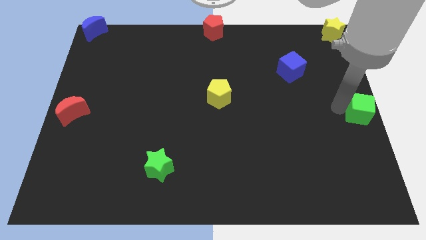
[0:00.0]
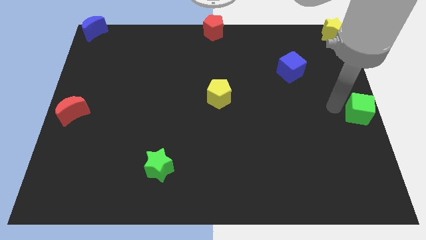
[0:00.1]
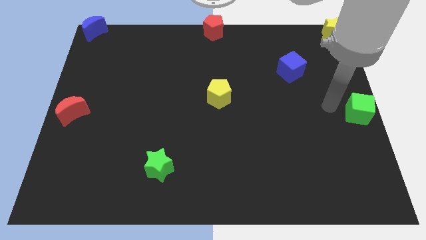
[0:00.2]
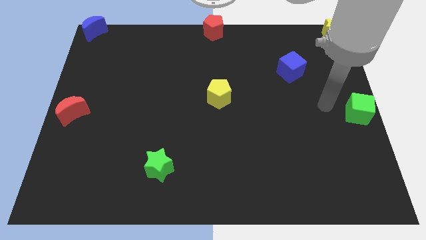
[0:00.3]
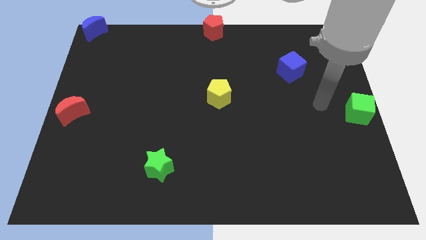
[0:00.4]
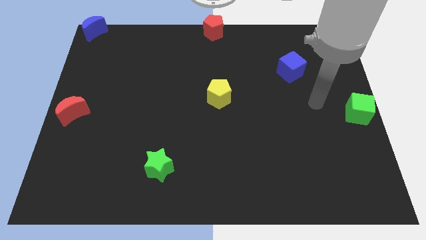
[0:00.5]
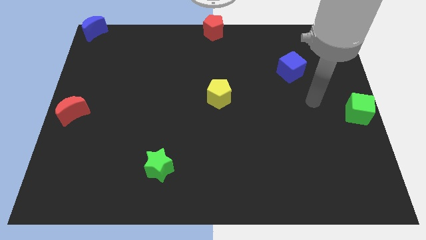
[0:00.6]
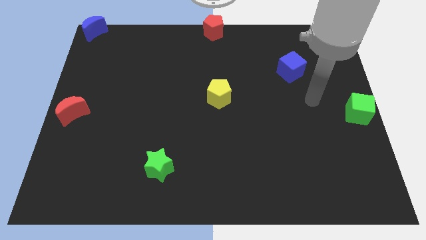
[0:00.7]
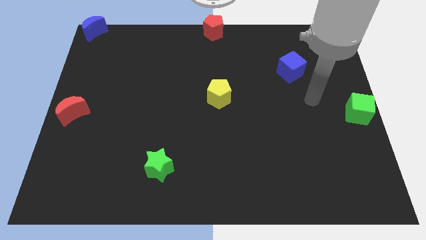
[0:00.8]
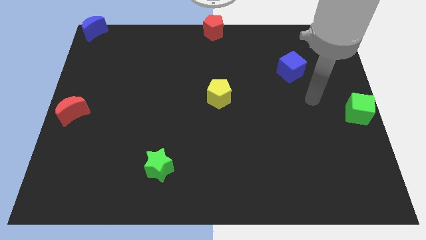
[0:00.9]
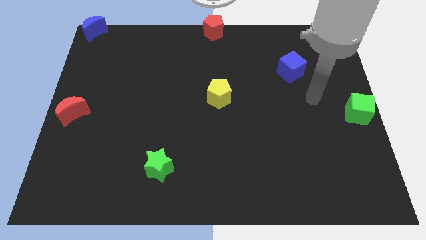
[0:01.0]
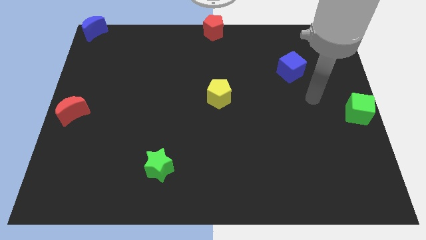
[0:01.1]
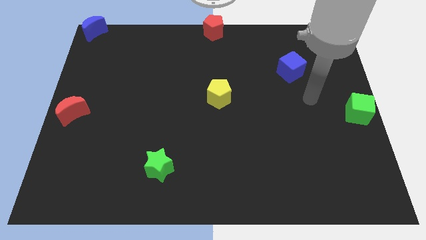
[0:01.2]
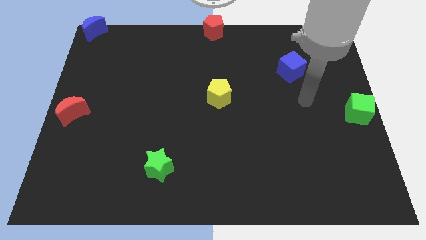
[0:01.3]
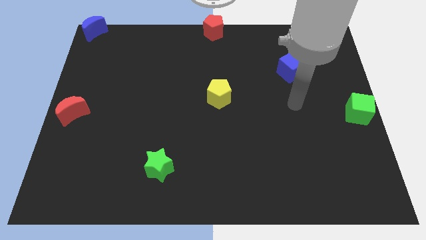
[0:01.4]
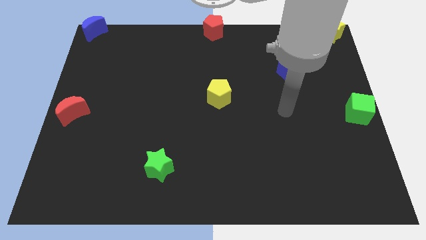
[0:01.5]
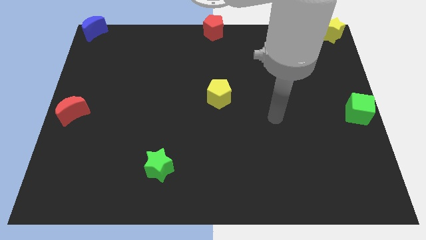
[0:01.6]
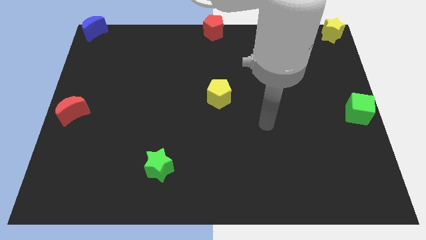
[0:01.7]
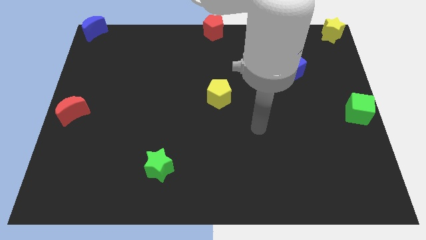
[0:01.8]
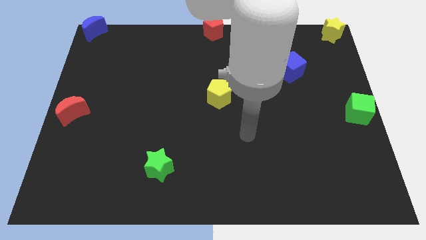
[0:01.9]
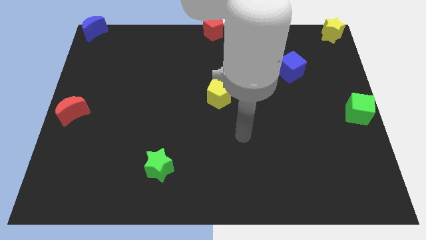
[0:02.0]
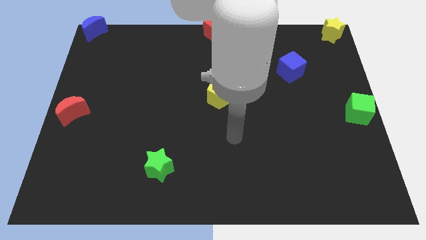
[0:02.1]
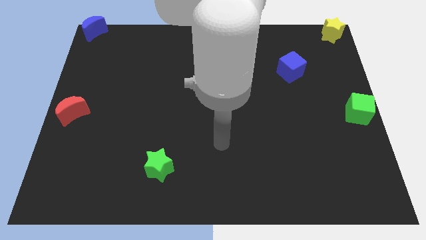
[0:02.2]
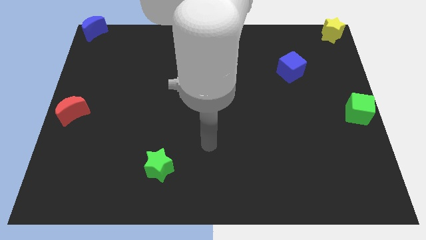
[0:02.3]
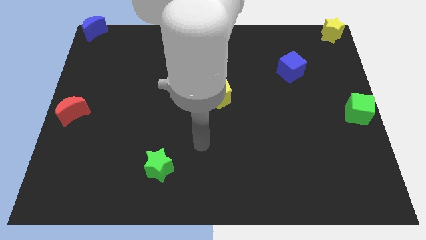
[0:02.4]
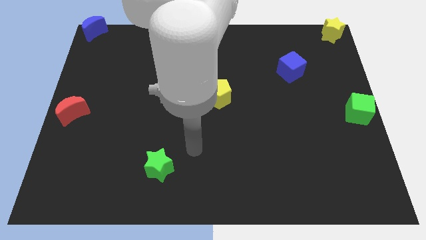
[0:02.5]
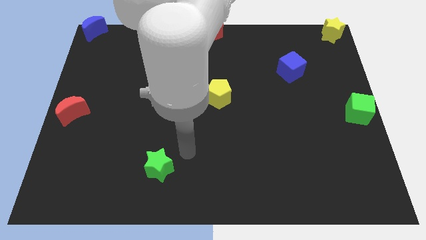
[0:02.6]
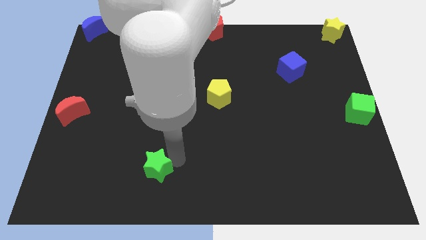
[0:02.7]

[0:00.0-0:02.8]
move your arm right to the green star

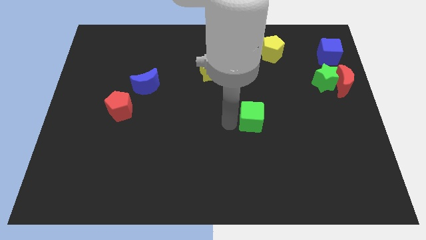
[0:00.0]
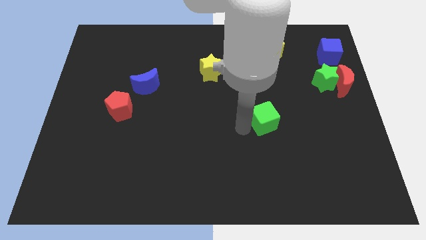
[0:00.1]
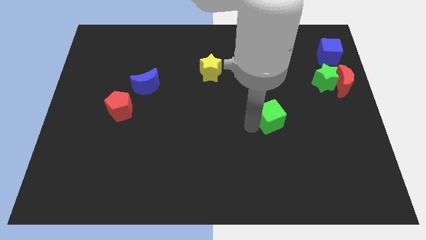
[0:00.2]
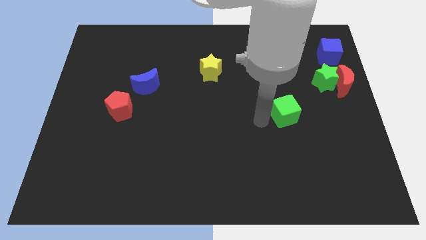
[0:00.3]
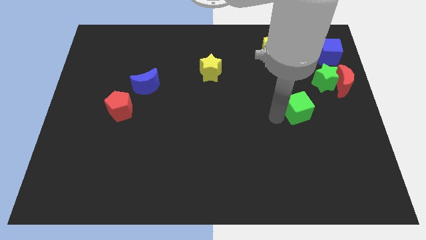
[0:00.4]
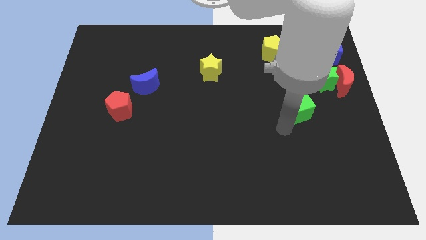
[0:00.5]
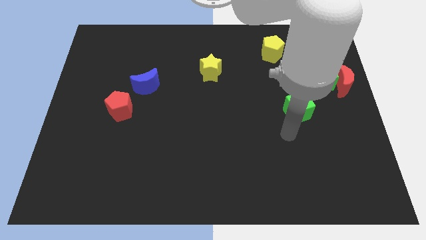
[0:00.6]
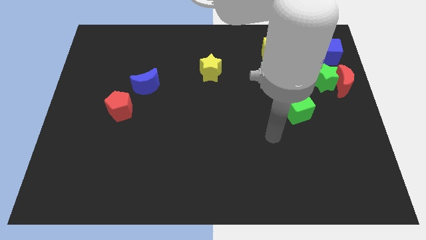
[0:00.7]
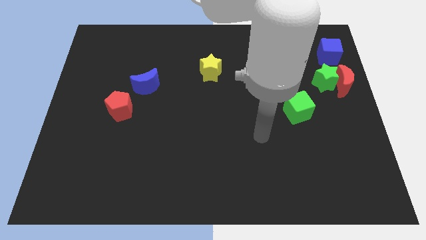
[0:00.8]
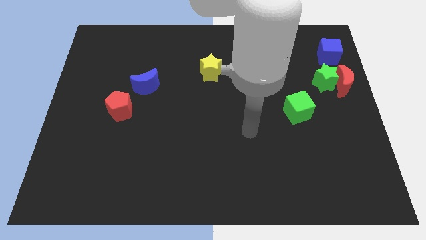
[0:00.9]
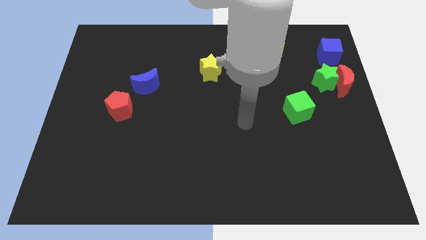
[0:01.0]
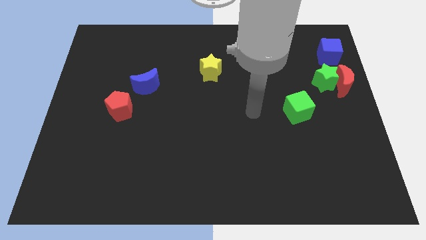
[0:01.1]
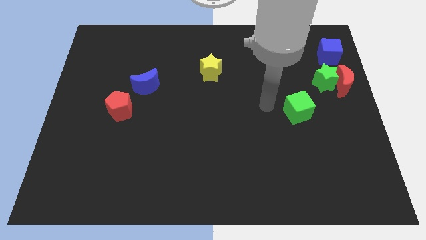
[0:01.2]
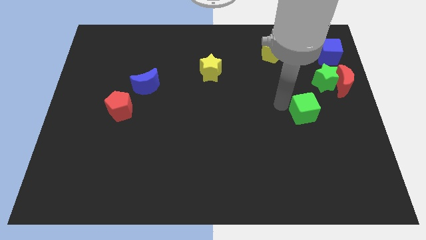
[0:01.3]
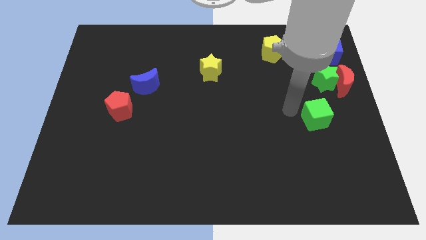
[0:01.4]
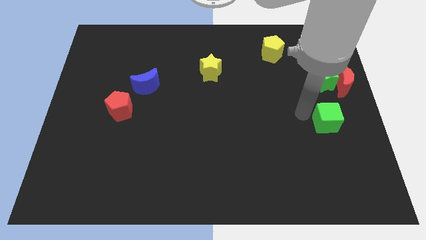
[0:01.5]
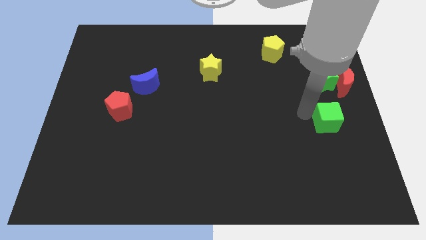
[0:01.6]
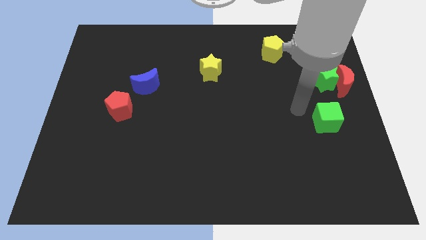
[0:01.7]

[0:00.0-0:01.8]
drag the green cube to the bottom of the green star

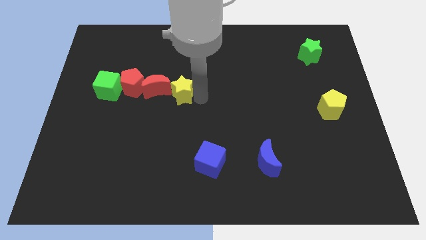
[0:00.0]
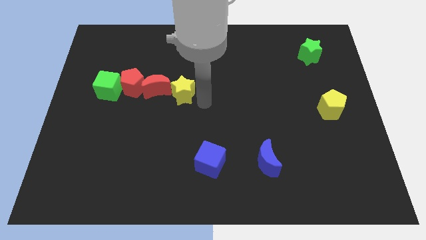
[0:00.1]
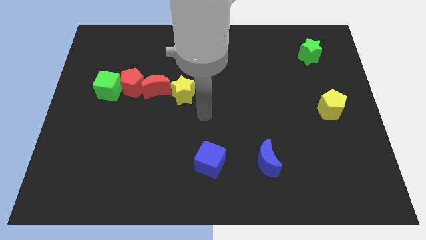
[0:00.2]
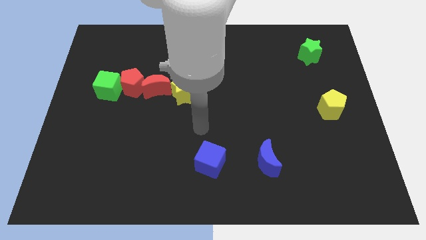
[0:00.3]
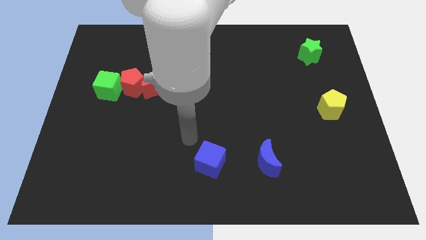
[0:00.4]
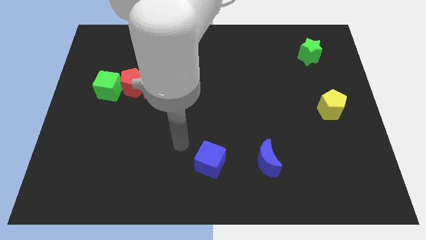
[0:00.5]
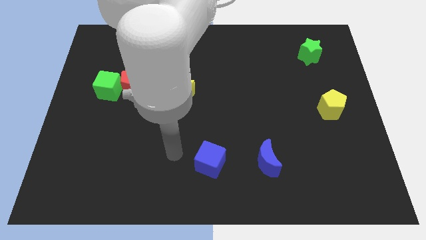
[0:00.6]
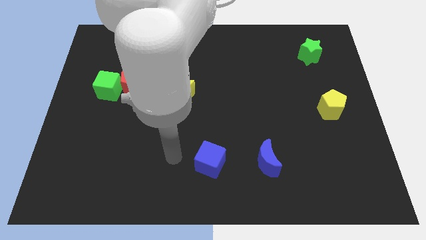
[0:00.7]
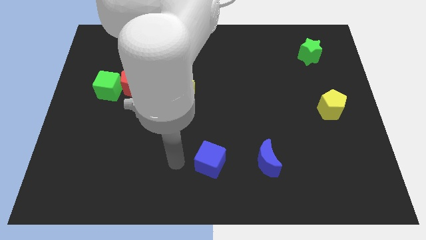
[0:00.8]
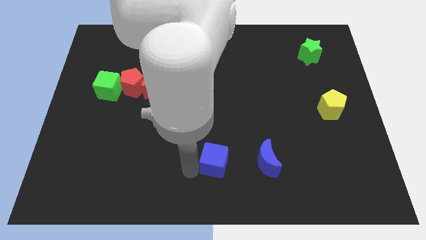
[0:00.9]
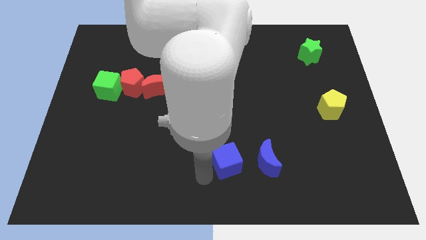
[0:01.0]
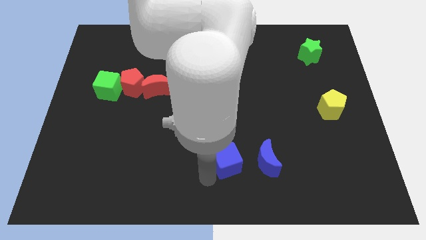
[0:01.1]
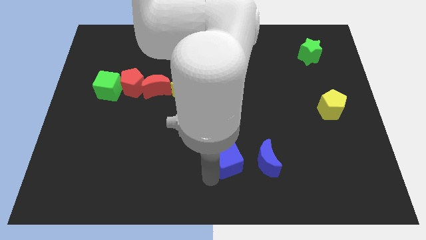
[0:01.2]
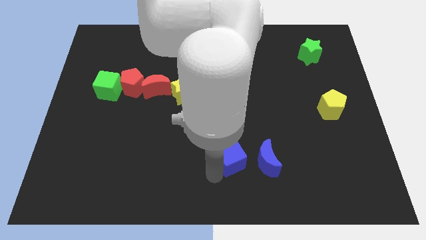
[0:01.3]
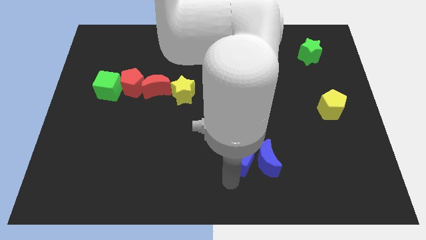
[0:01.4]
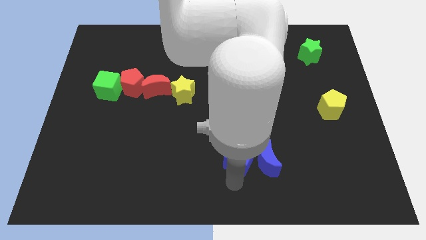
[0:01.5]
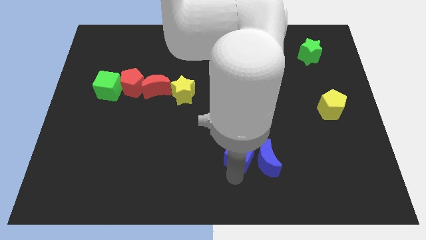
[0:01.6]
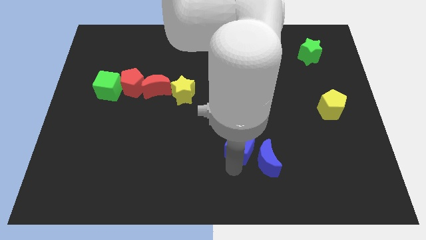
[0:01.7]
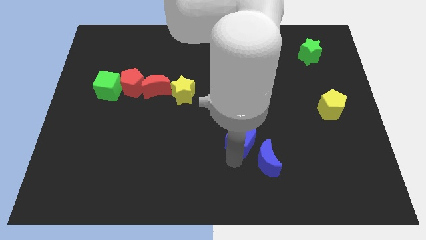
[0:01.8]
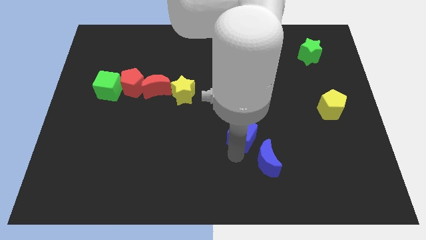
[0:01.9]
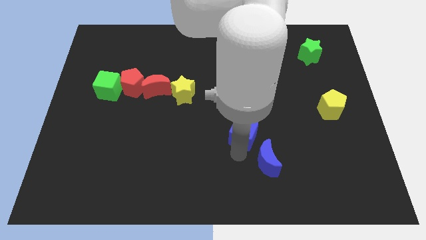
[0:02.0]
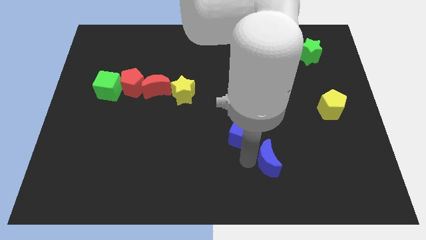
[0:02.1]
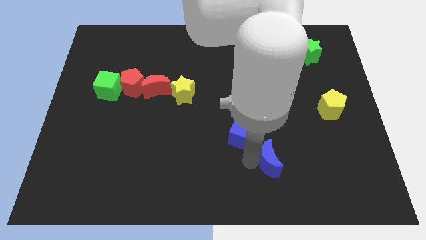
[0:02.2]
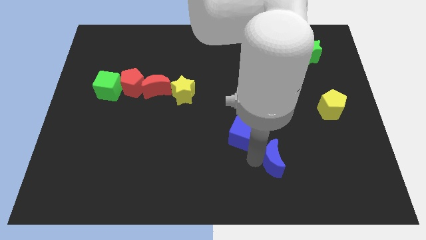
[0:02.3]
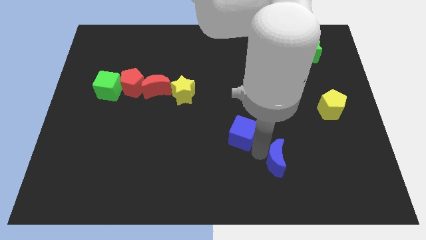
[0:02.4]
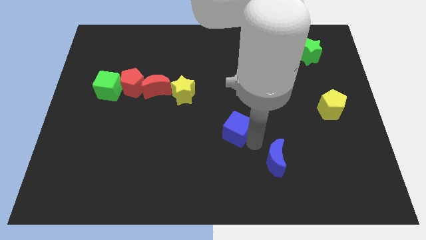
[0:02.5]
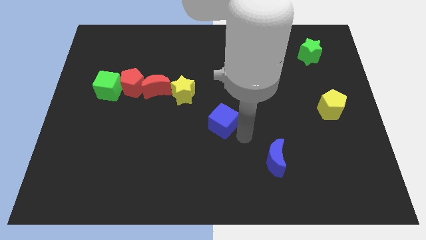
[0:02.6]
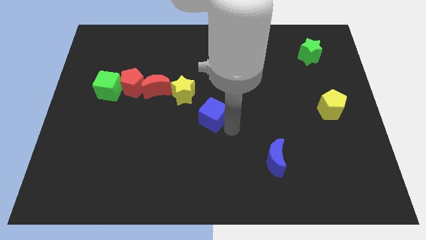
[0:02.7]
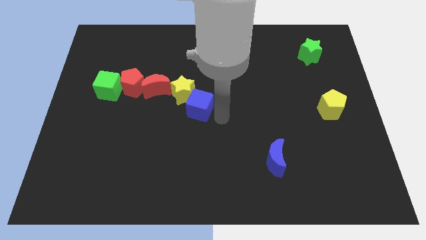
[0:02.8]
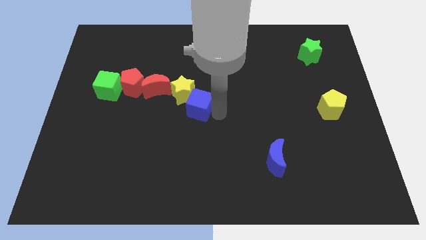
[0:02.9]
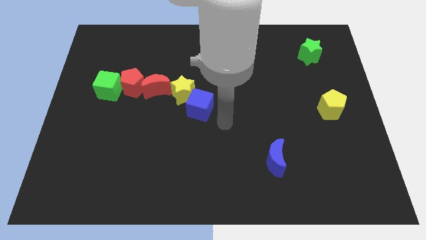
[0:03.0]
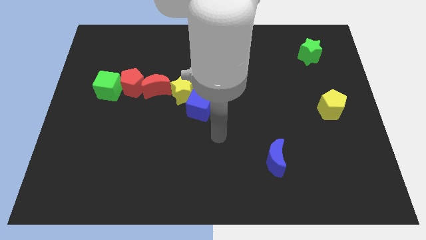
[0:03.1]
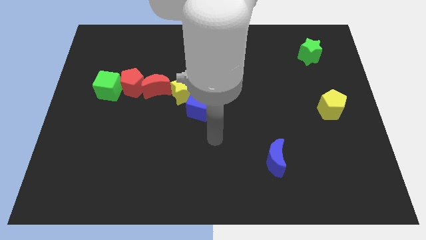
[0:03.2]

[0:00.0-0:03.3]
adjust the blue cube at the bottom right of the yellow star

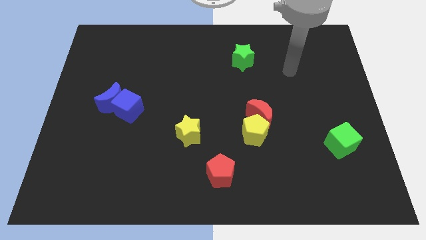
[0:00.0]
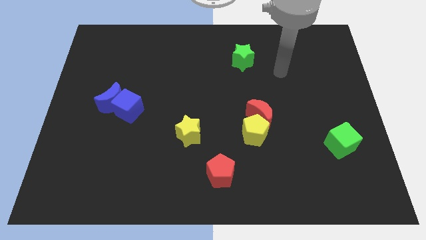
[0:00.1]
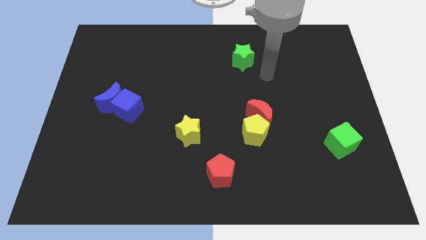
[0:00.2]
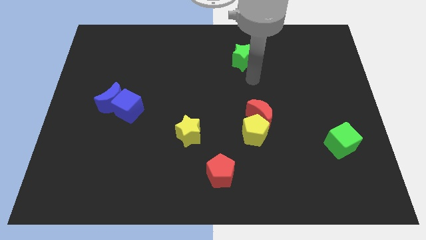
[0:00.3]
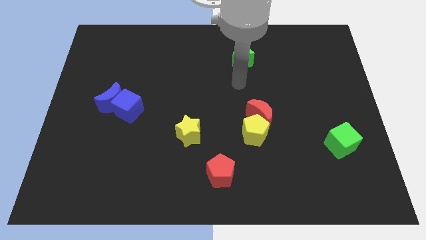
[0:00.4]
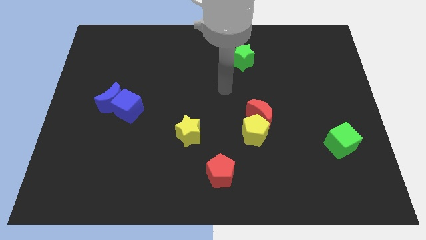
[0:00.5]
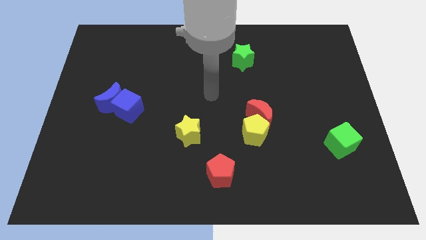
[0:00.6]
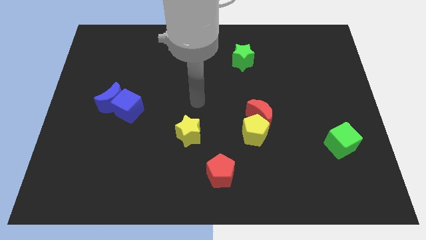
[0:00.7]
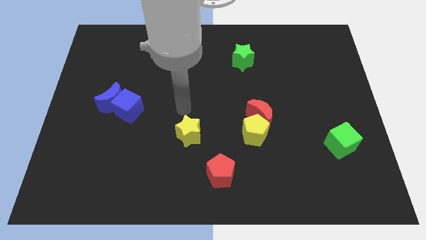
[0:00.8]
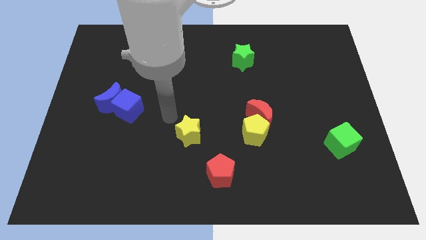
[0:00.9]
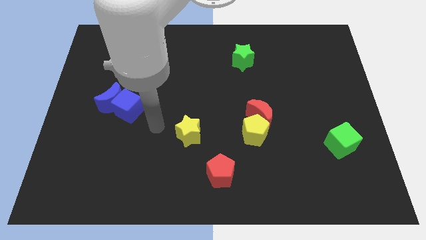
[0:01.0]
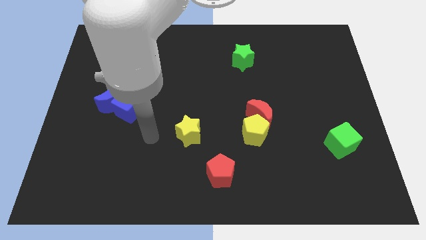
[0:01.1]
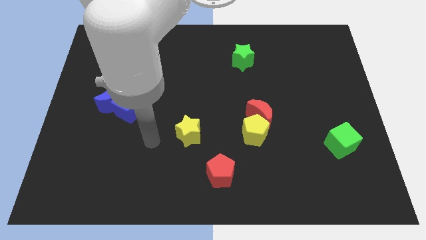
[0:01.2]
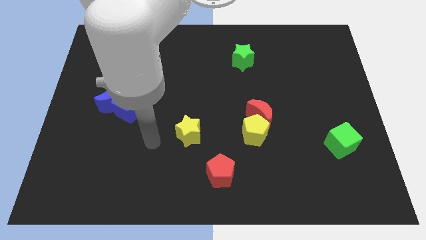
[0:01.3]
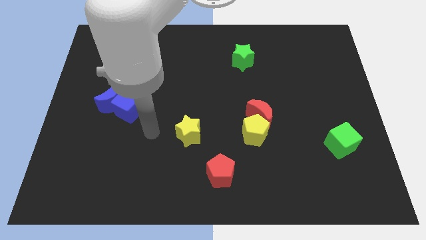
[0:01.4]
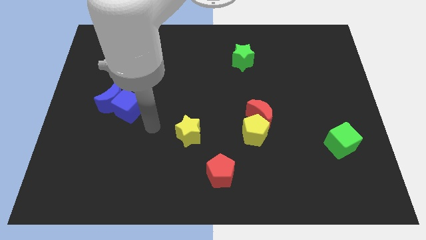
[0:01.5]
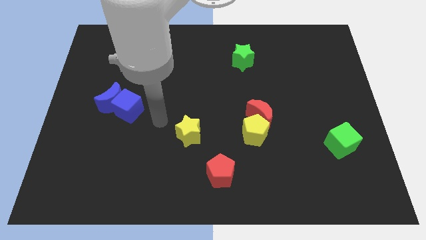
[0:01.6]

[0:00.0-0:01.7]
place your hand parallel right to the blue cube
